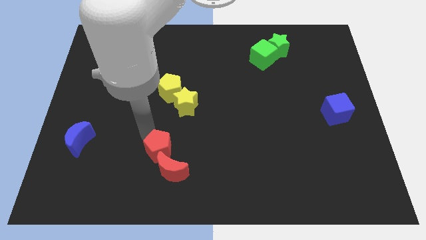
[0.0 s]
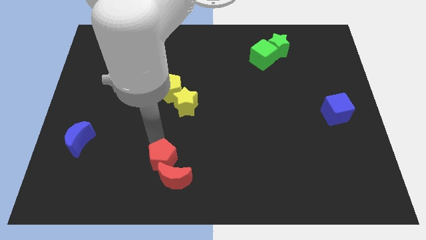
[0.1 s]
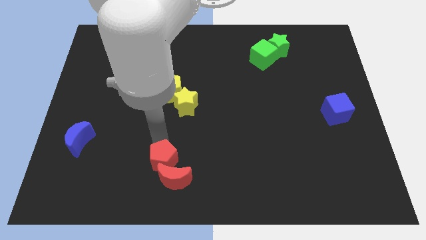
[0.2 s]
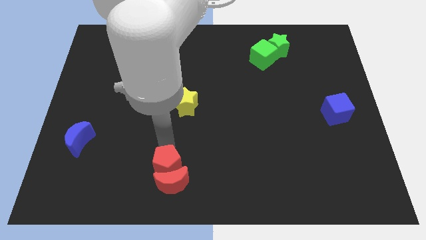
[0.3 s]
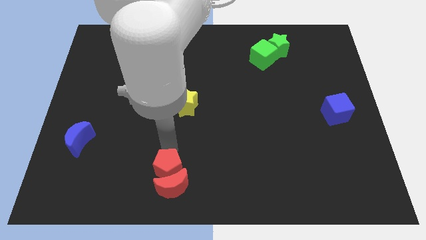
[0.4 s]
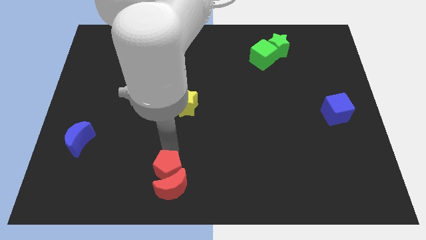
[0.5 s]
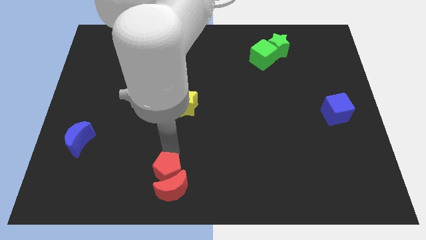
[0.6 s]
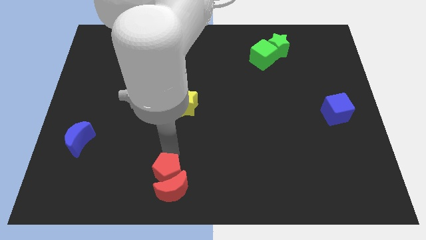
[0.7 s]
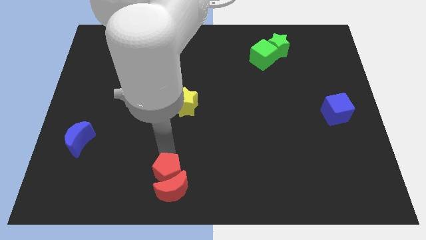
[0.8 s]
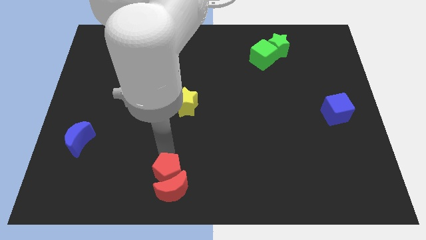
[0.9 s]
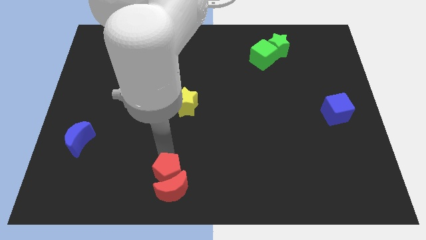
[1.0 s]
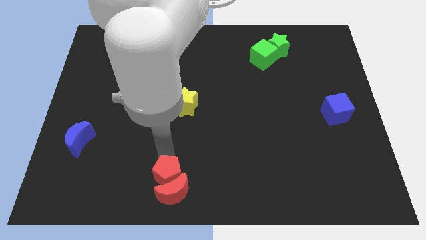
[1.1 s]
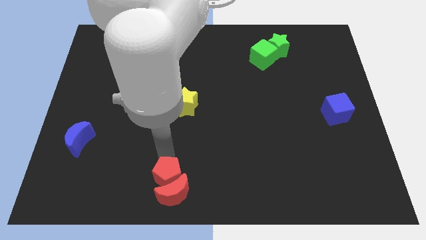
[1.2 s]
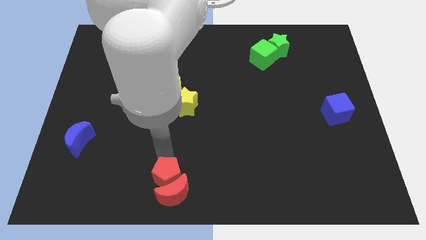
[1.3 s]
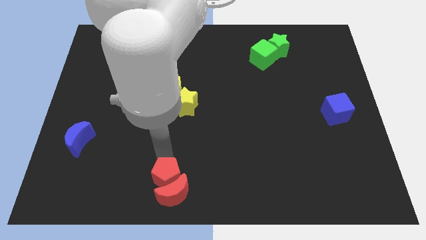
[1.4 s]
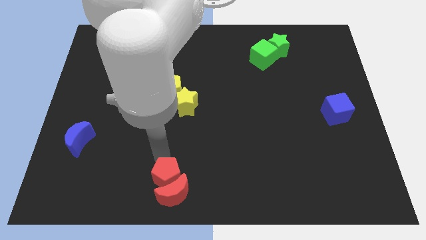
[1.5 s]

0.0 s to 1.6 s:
move the red pentagon into red moon

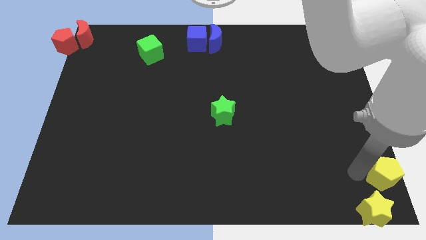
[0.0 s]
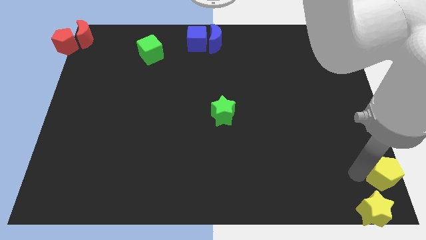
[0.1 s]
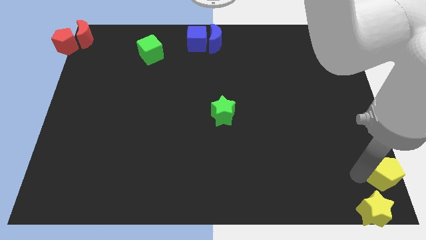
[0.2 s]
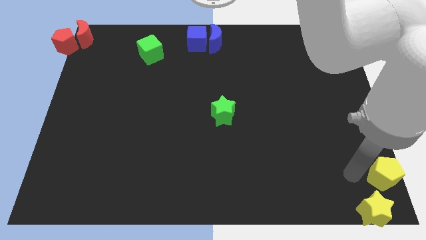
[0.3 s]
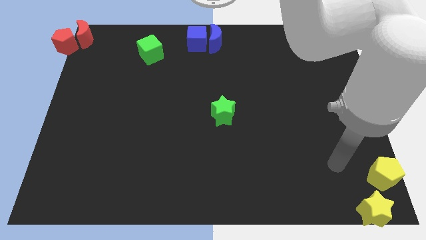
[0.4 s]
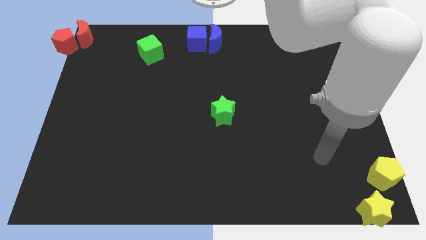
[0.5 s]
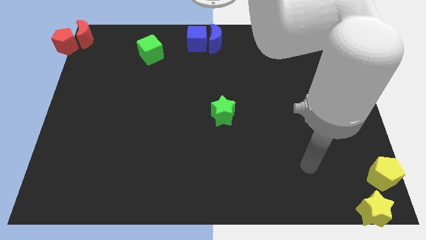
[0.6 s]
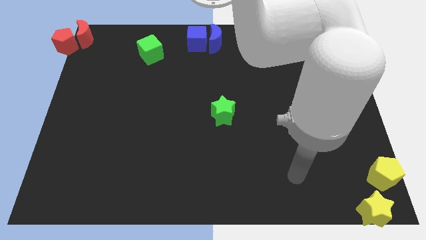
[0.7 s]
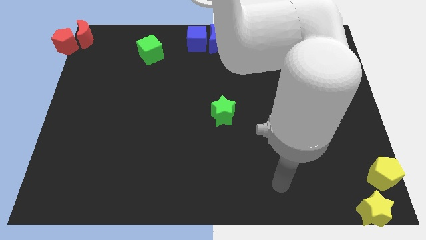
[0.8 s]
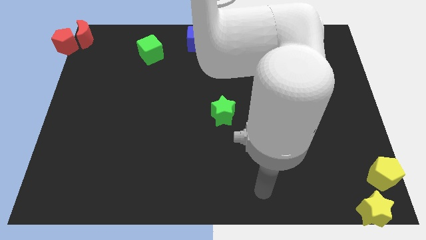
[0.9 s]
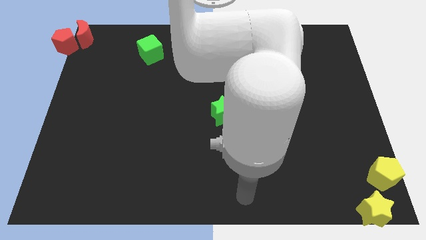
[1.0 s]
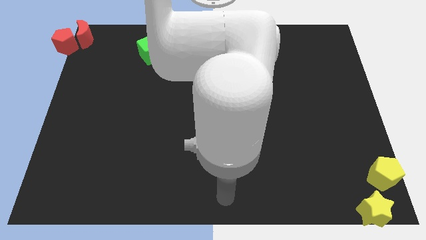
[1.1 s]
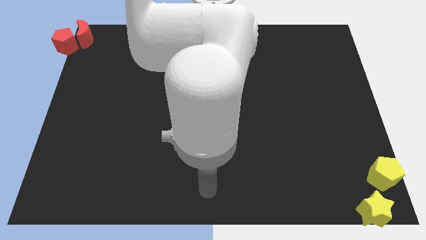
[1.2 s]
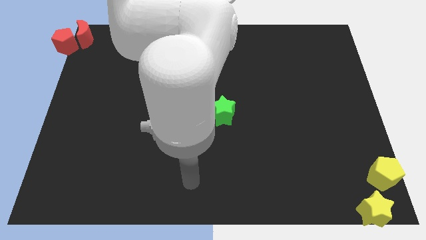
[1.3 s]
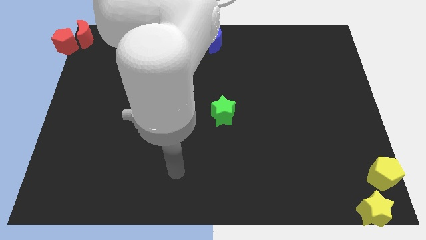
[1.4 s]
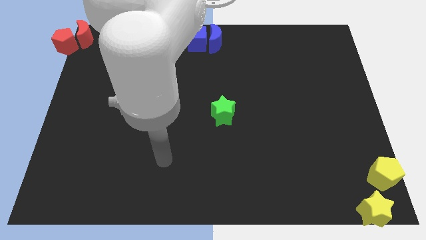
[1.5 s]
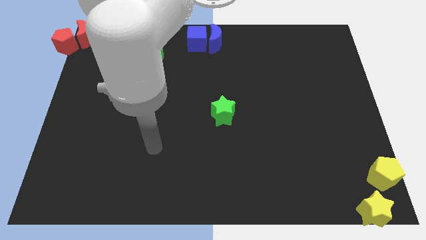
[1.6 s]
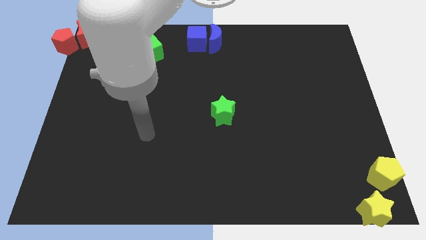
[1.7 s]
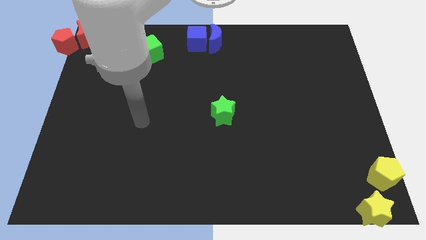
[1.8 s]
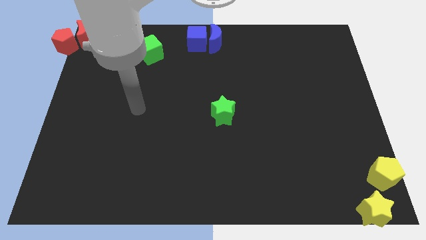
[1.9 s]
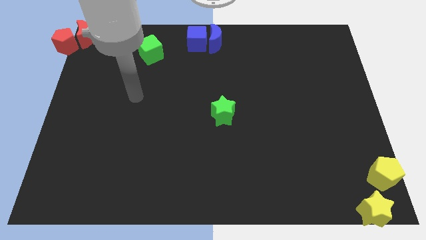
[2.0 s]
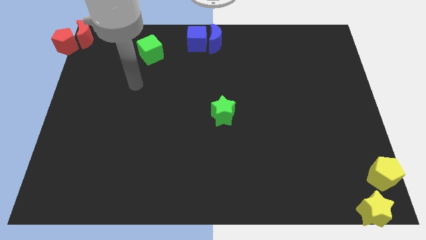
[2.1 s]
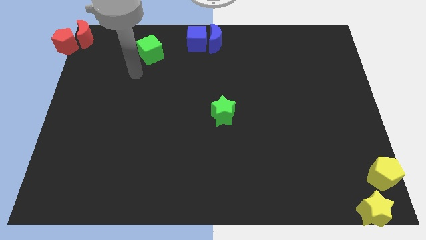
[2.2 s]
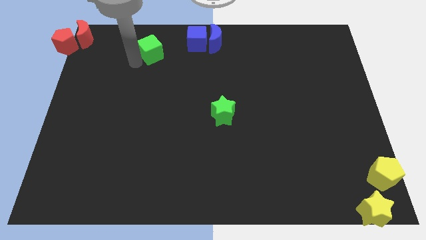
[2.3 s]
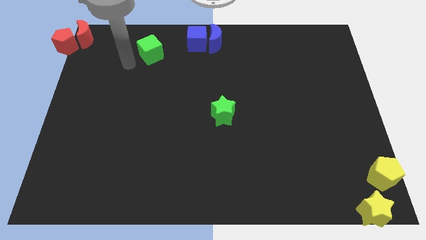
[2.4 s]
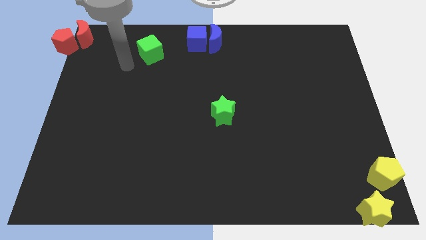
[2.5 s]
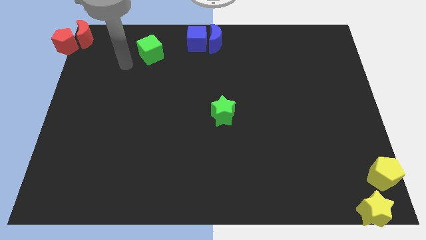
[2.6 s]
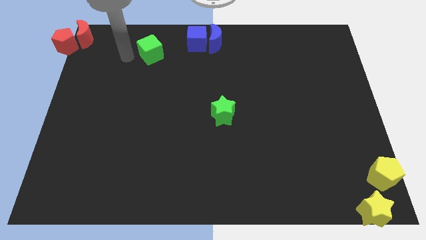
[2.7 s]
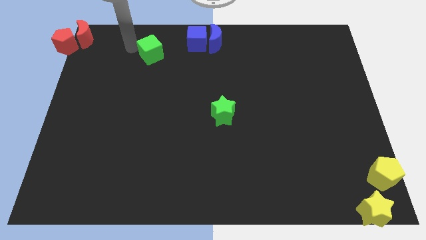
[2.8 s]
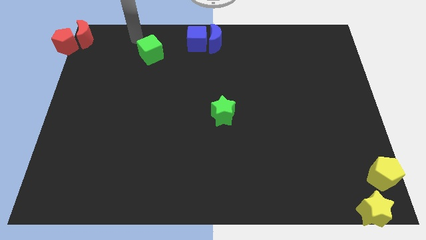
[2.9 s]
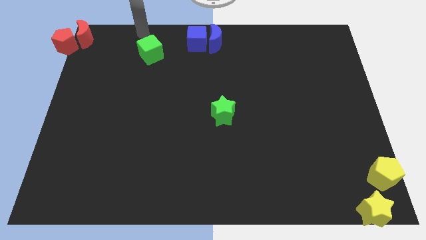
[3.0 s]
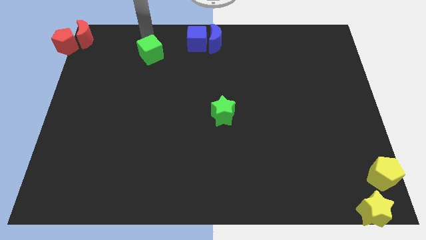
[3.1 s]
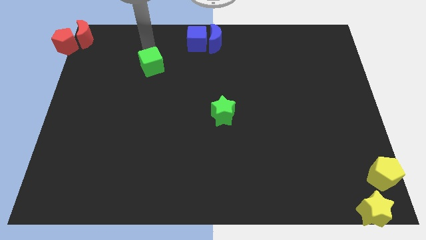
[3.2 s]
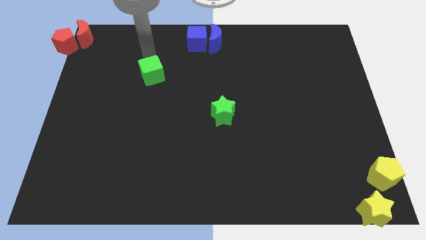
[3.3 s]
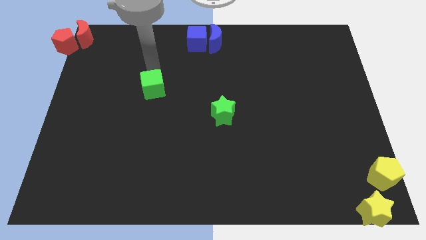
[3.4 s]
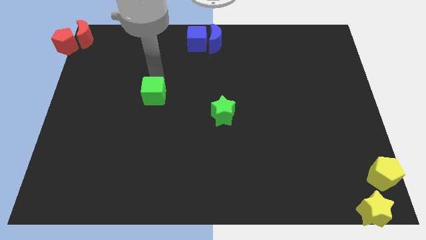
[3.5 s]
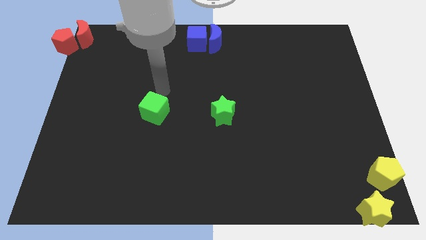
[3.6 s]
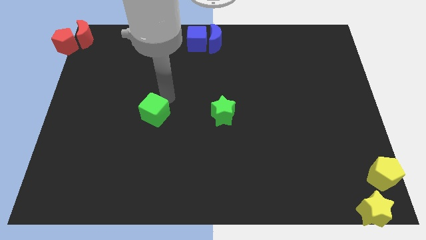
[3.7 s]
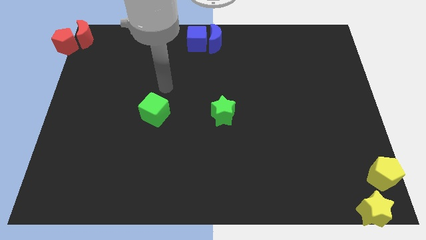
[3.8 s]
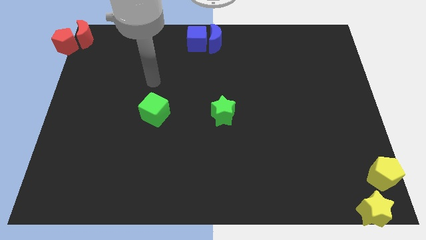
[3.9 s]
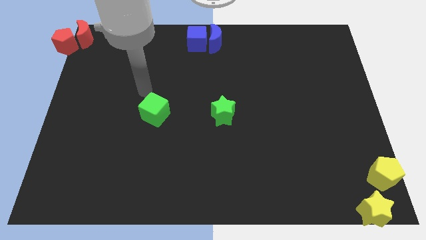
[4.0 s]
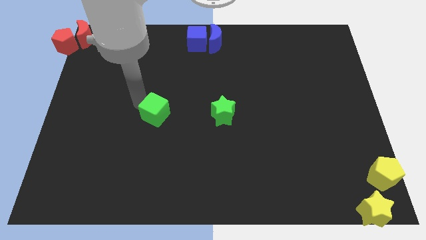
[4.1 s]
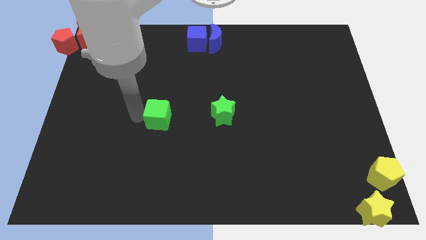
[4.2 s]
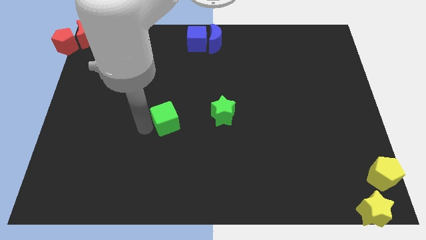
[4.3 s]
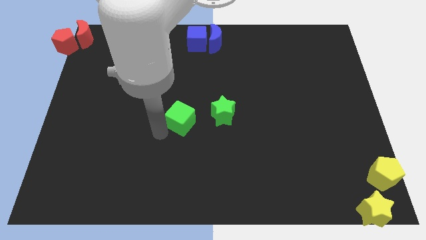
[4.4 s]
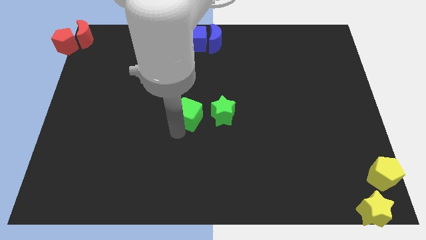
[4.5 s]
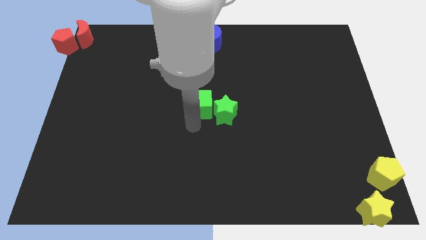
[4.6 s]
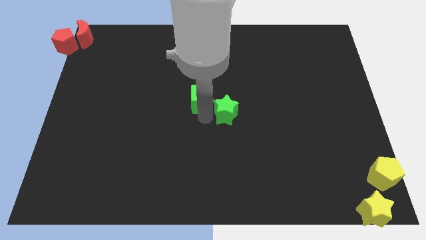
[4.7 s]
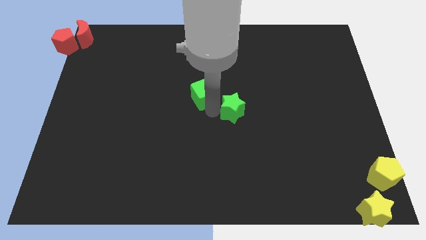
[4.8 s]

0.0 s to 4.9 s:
put the green cube at the center of the board

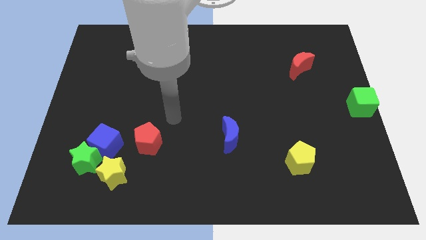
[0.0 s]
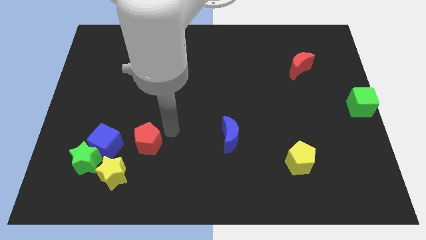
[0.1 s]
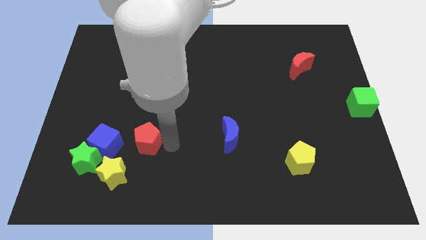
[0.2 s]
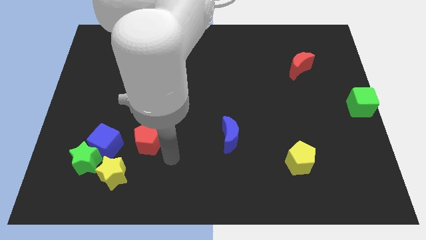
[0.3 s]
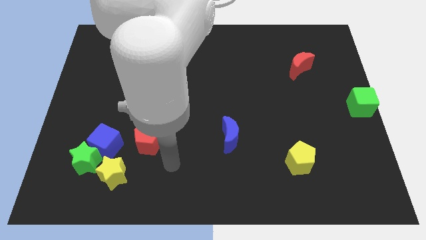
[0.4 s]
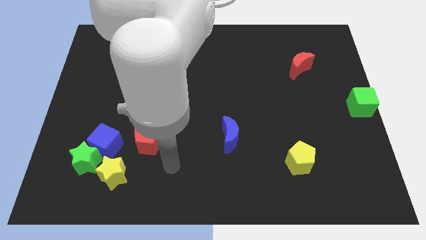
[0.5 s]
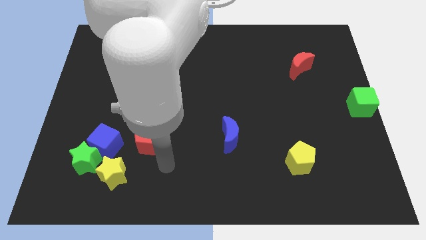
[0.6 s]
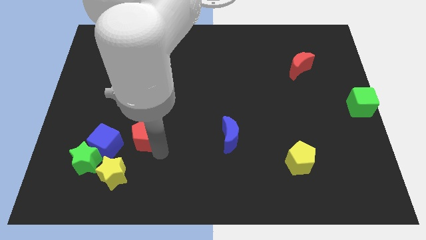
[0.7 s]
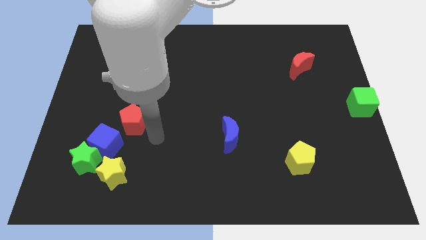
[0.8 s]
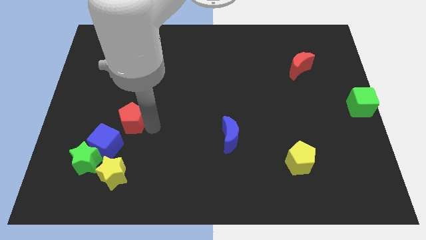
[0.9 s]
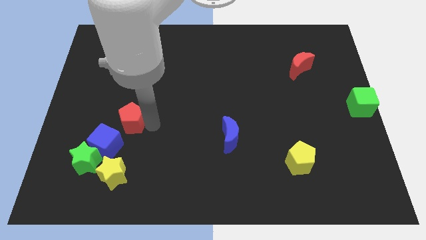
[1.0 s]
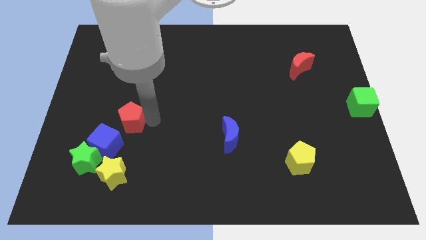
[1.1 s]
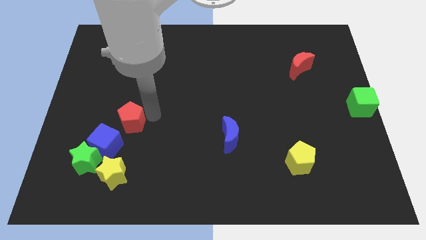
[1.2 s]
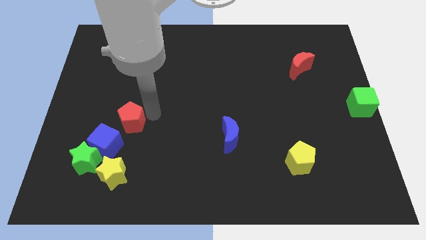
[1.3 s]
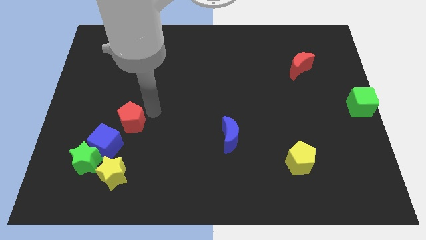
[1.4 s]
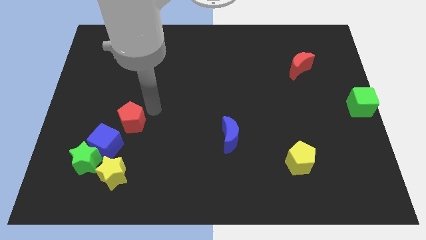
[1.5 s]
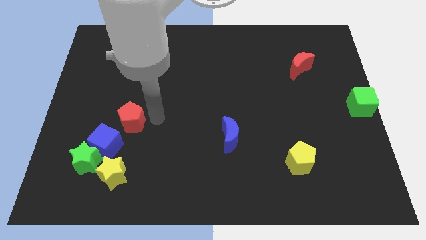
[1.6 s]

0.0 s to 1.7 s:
move the red pentagon above the blue cube

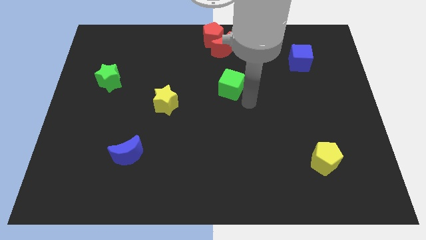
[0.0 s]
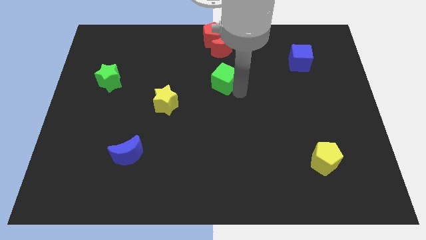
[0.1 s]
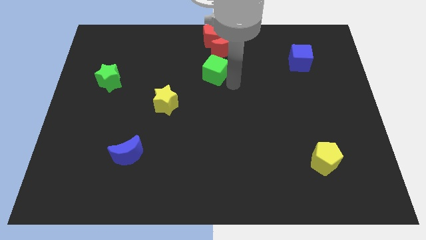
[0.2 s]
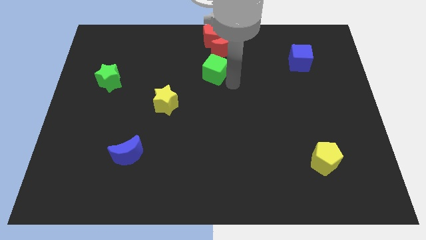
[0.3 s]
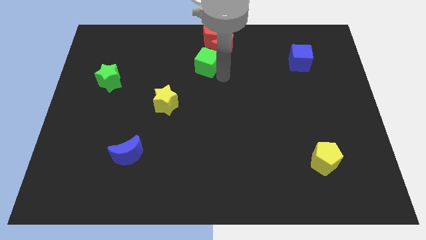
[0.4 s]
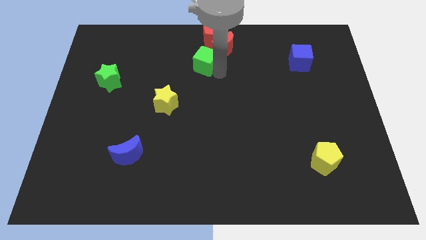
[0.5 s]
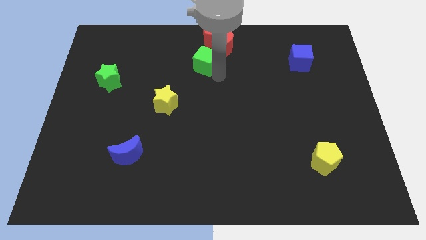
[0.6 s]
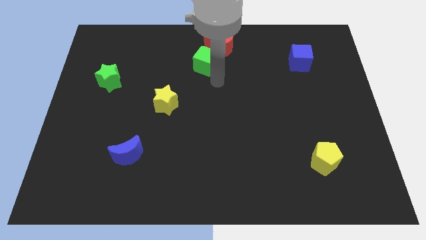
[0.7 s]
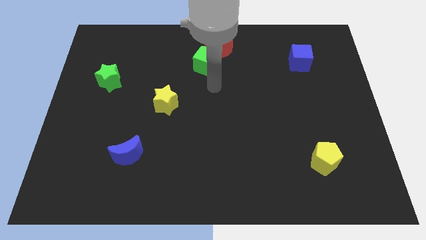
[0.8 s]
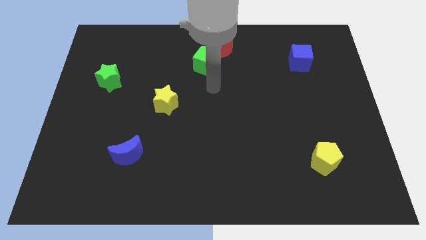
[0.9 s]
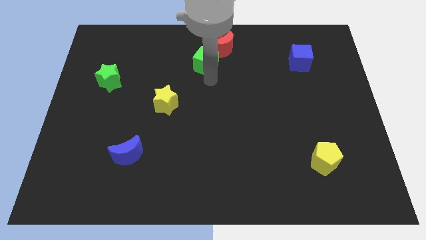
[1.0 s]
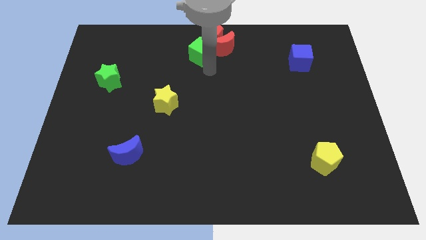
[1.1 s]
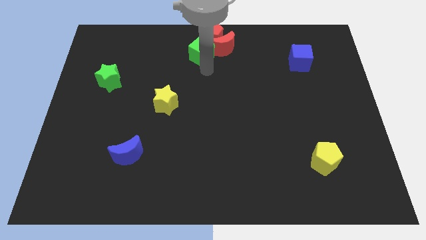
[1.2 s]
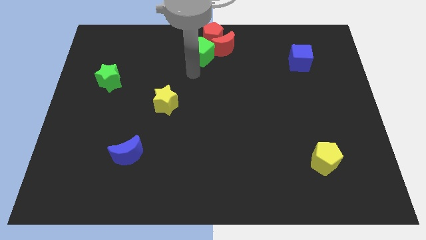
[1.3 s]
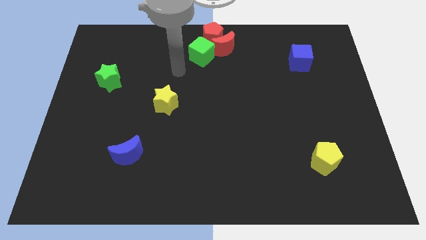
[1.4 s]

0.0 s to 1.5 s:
place the green cube towards the bottom left side of the red crescent
